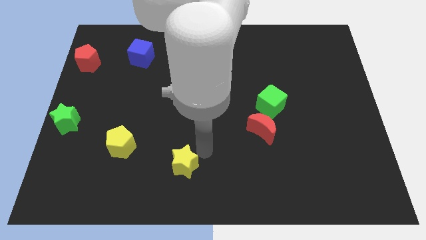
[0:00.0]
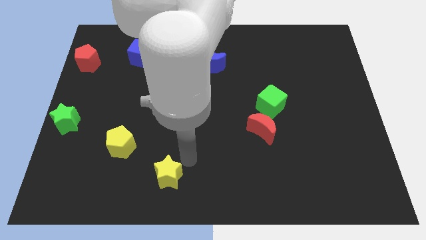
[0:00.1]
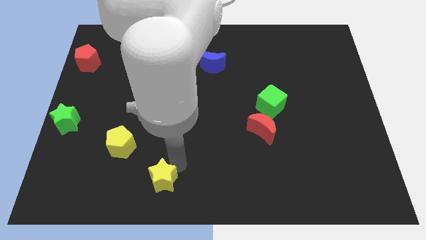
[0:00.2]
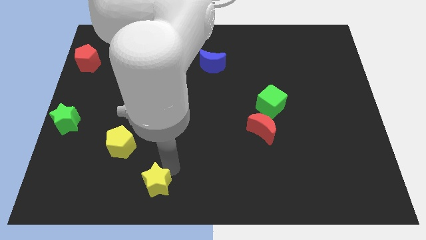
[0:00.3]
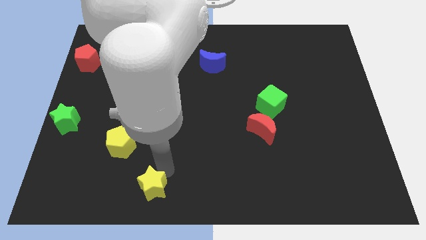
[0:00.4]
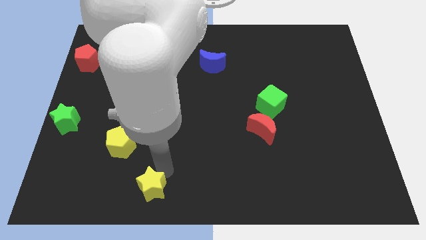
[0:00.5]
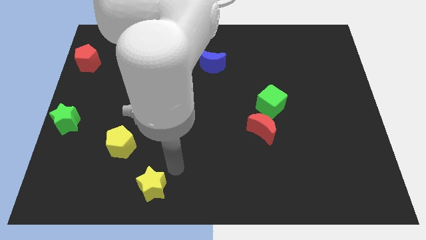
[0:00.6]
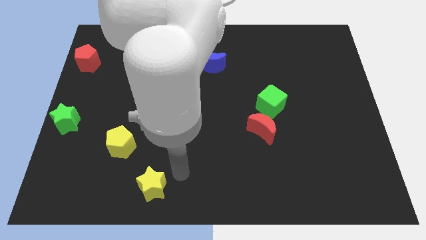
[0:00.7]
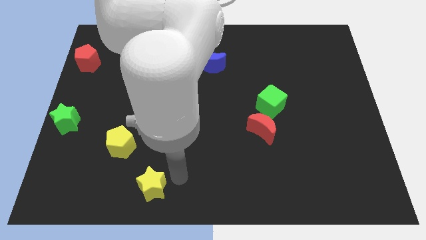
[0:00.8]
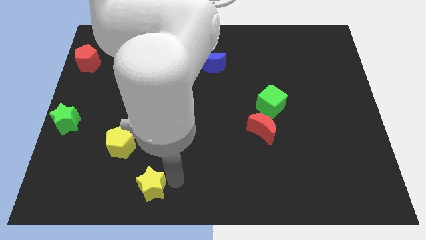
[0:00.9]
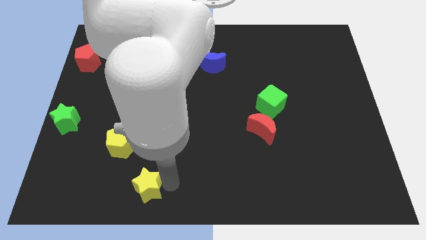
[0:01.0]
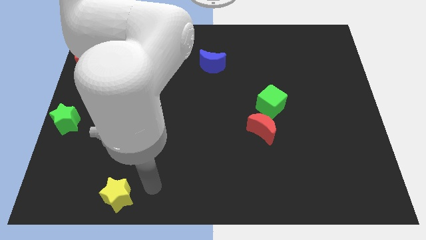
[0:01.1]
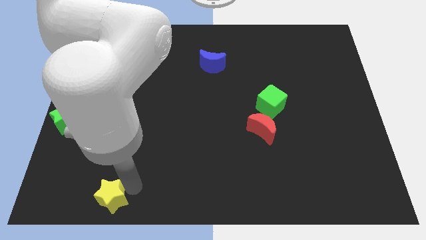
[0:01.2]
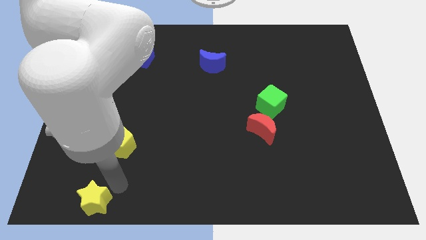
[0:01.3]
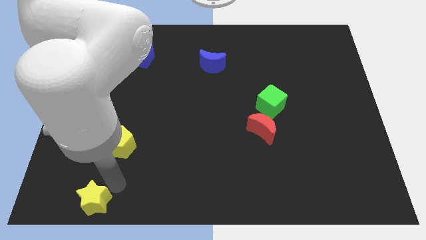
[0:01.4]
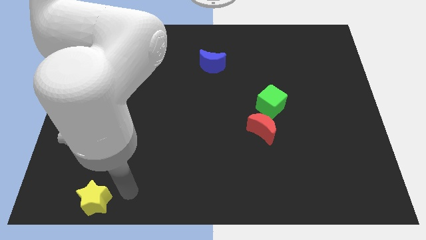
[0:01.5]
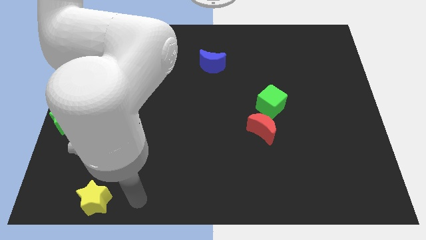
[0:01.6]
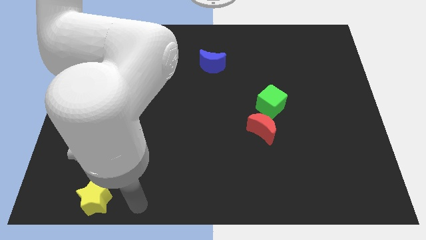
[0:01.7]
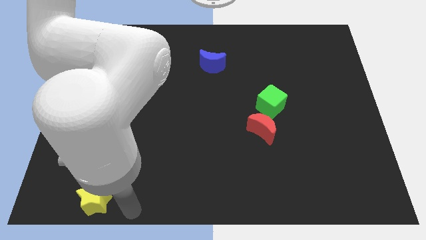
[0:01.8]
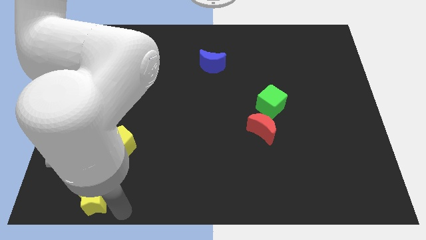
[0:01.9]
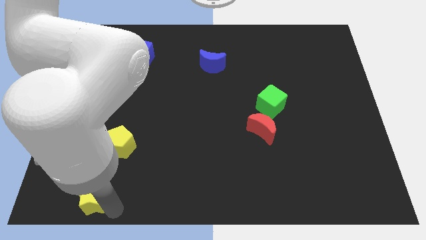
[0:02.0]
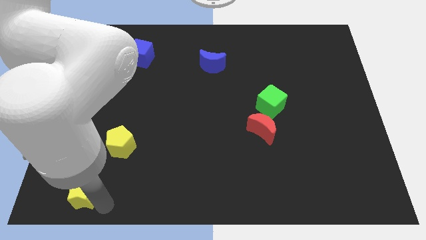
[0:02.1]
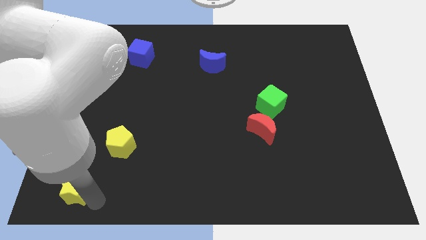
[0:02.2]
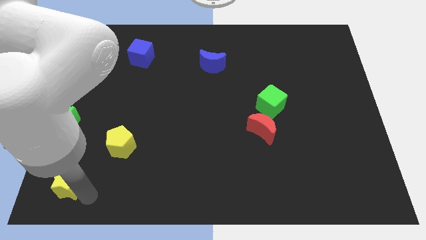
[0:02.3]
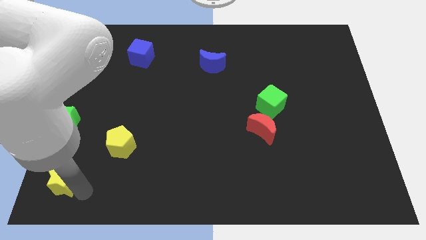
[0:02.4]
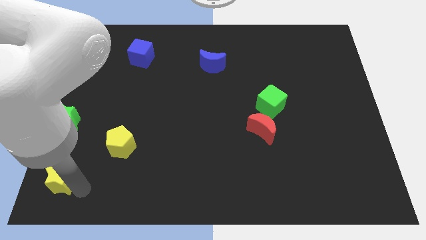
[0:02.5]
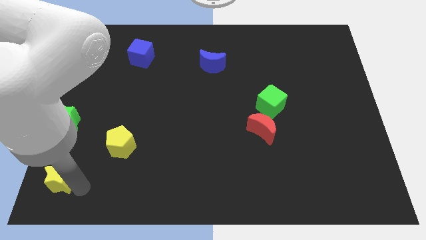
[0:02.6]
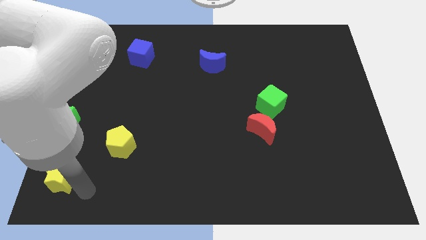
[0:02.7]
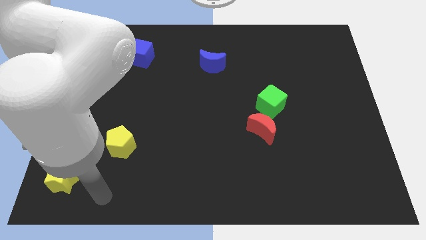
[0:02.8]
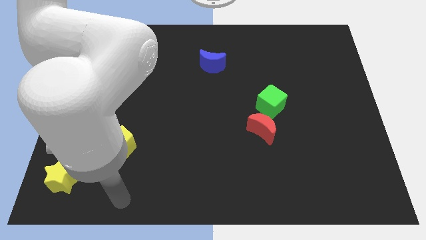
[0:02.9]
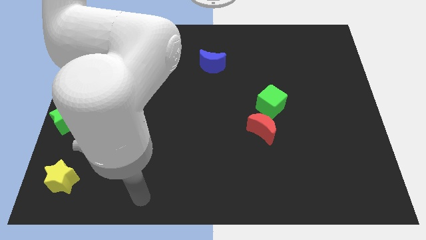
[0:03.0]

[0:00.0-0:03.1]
put the yellow star below the green star

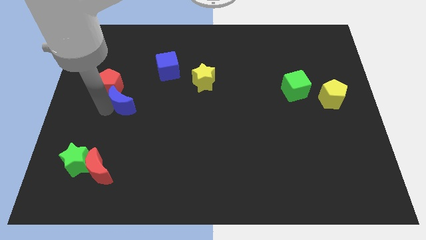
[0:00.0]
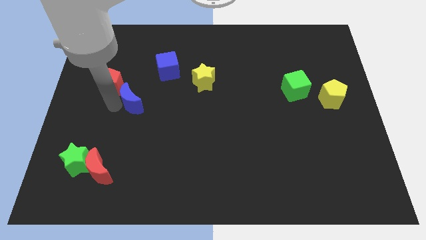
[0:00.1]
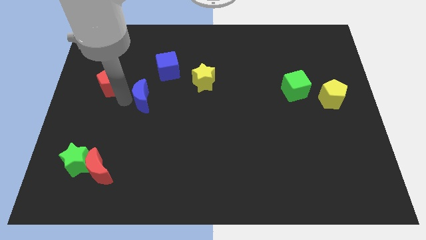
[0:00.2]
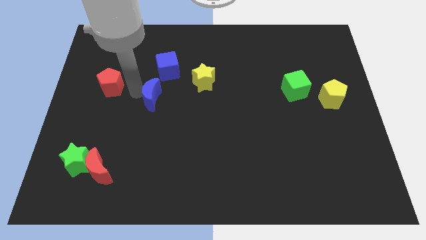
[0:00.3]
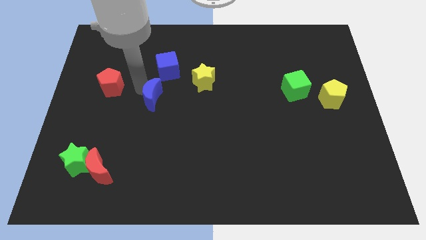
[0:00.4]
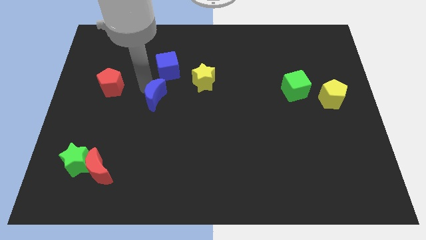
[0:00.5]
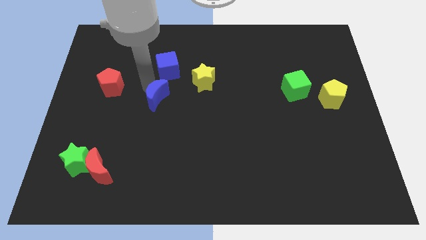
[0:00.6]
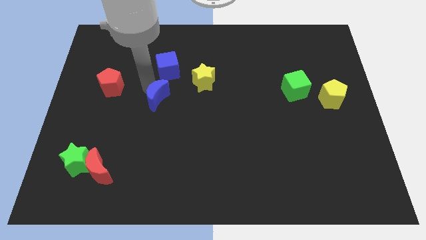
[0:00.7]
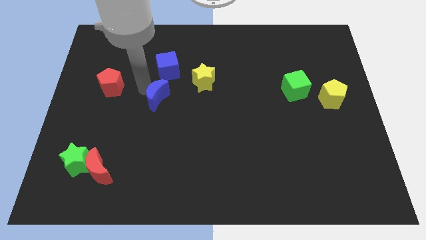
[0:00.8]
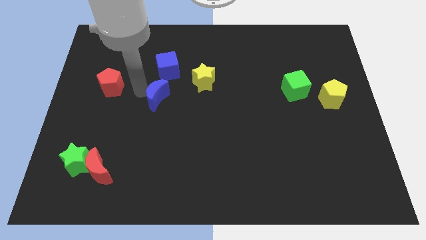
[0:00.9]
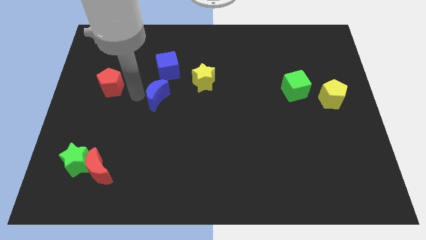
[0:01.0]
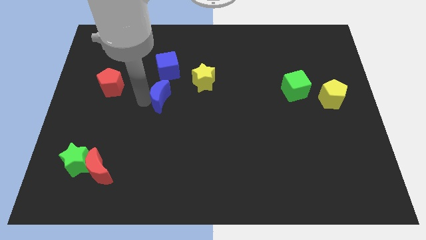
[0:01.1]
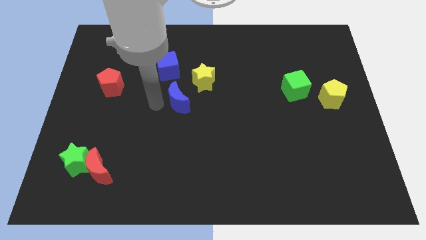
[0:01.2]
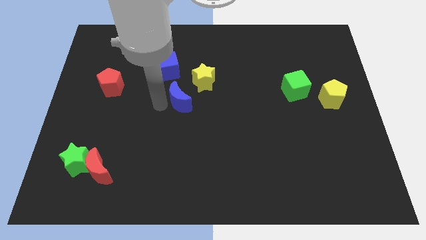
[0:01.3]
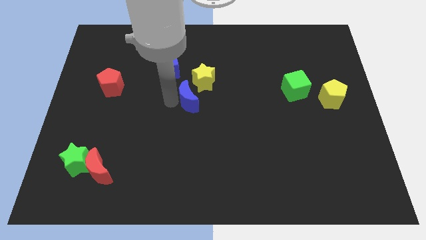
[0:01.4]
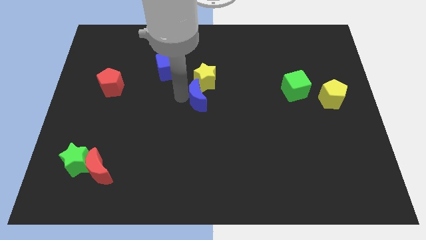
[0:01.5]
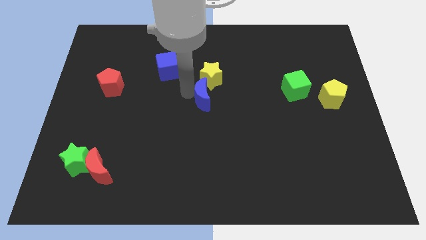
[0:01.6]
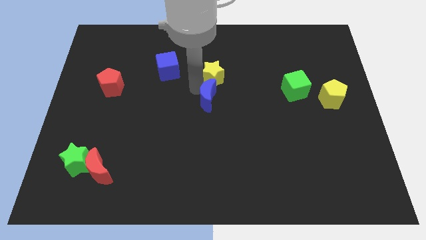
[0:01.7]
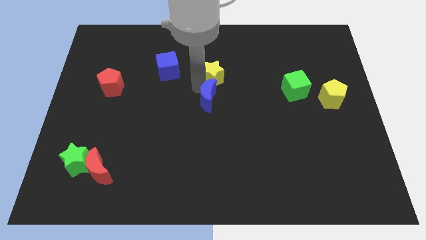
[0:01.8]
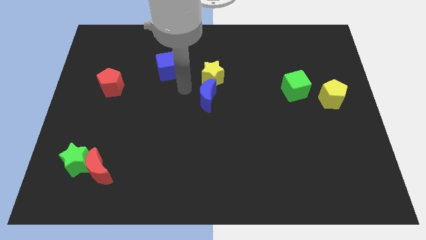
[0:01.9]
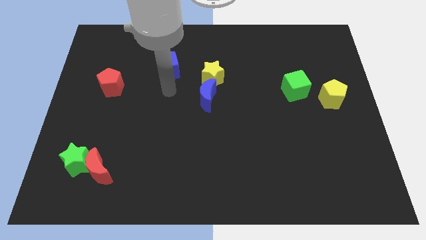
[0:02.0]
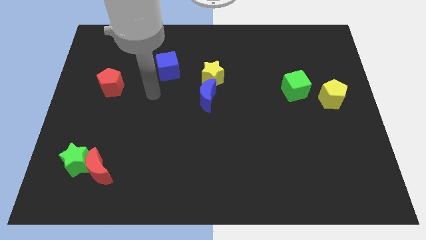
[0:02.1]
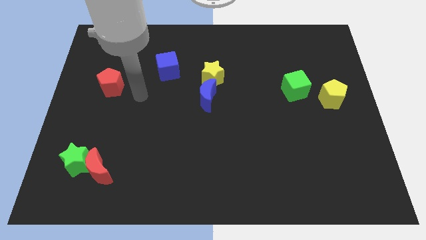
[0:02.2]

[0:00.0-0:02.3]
place the blue crescent below the yellow star

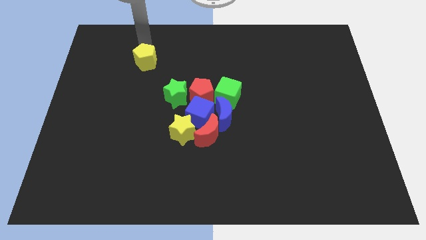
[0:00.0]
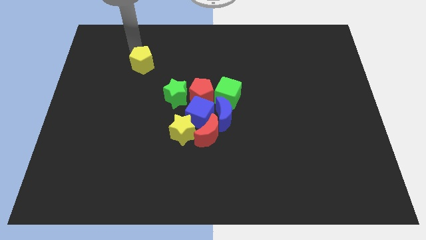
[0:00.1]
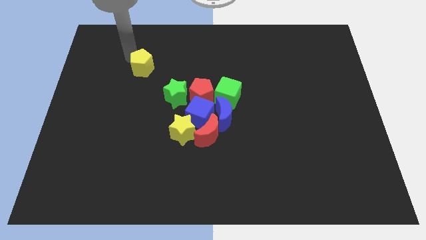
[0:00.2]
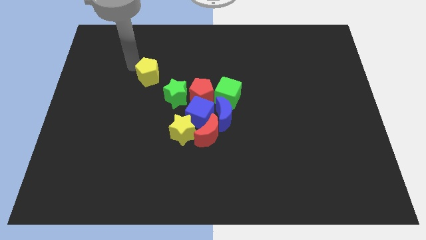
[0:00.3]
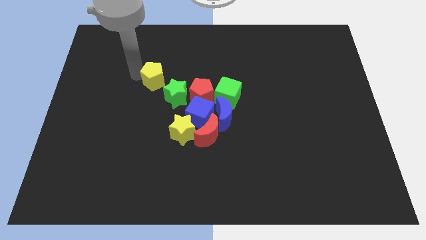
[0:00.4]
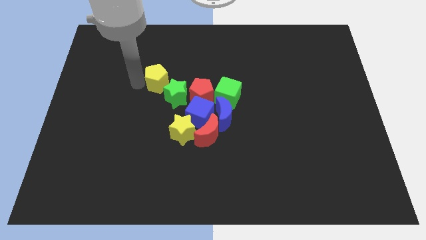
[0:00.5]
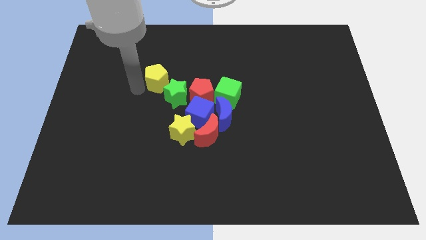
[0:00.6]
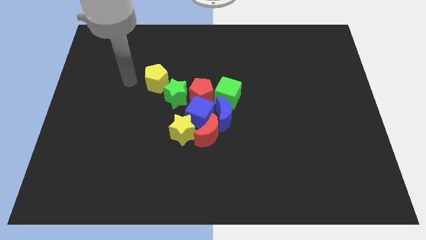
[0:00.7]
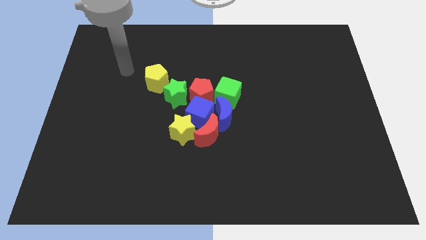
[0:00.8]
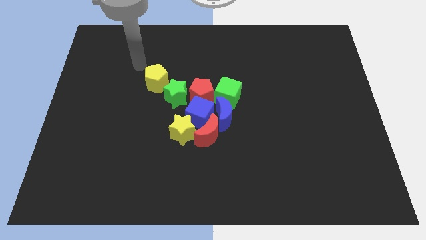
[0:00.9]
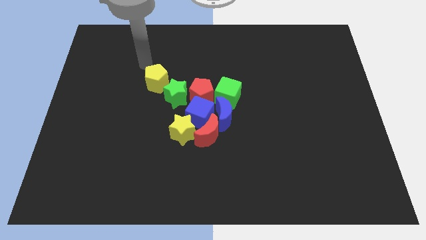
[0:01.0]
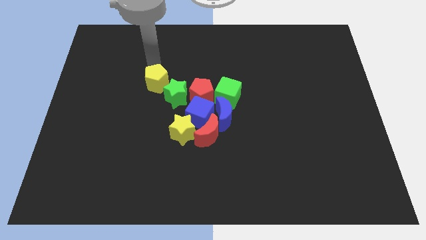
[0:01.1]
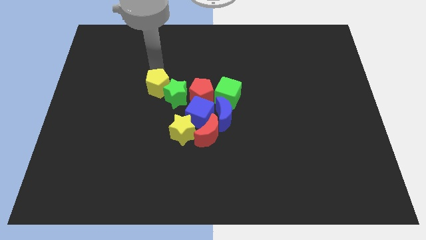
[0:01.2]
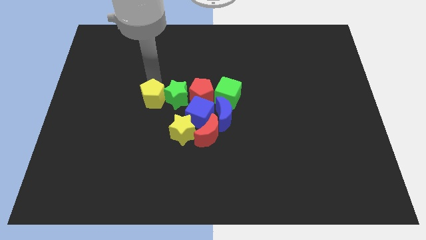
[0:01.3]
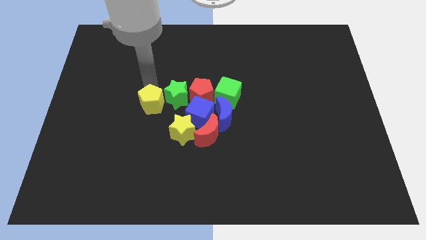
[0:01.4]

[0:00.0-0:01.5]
push the yellow pentagon to the left of the green star

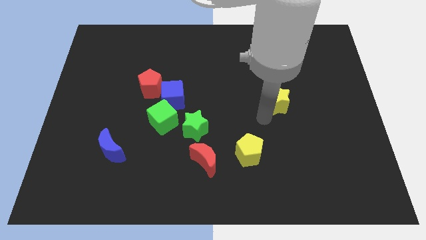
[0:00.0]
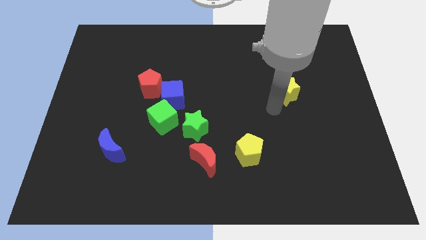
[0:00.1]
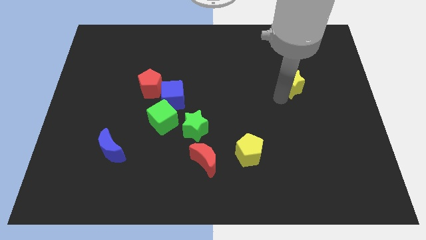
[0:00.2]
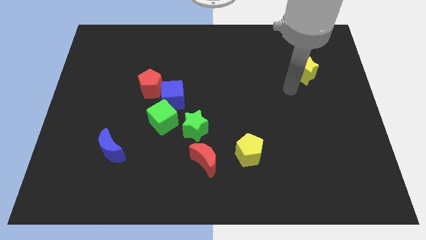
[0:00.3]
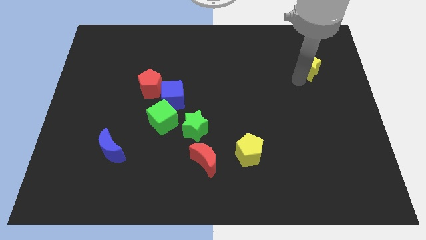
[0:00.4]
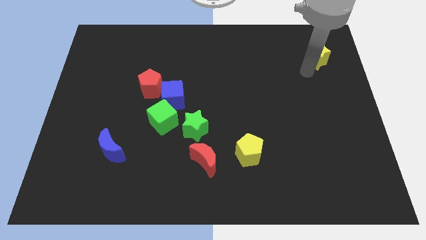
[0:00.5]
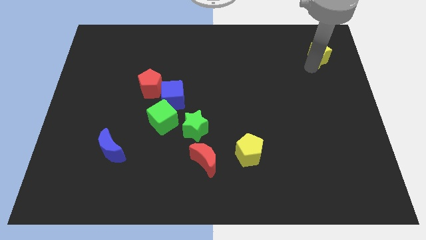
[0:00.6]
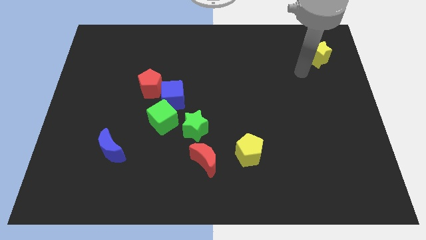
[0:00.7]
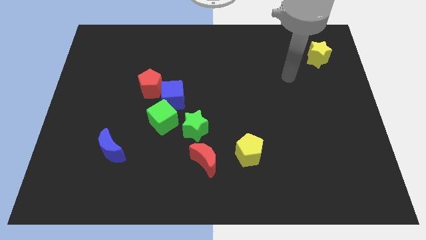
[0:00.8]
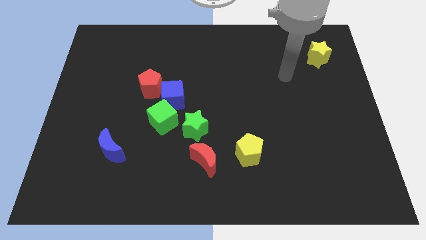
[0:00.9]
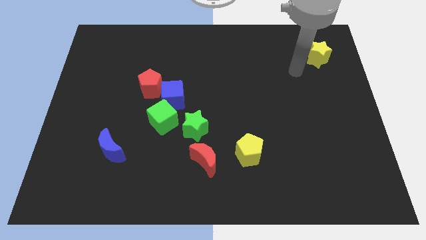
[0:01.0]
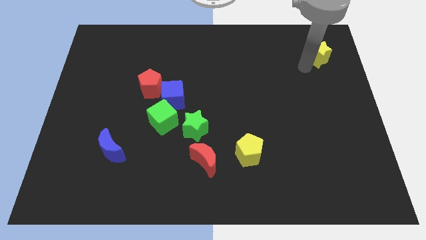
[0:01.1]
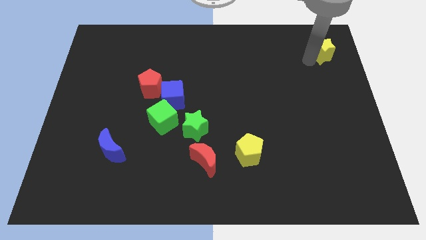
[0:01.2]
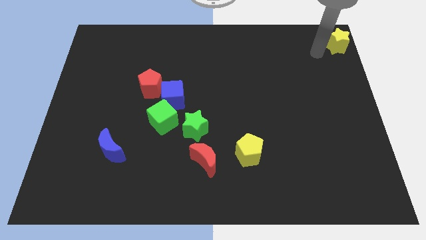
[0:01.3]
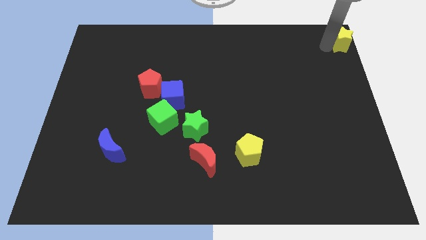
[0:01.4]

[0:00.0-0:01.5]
move the yellow star to the top right corner of the board

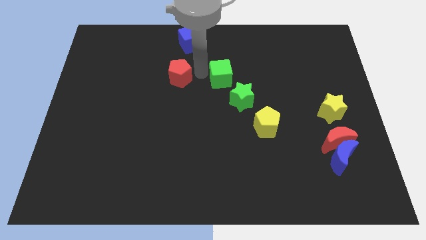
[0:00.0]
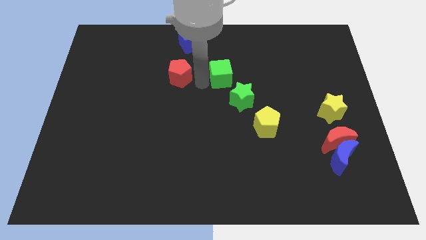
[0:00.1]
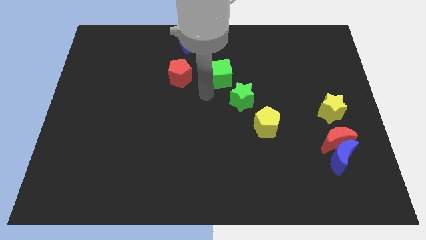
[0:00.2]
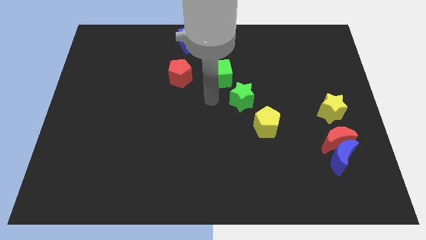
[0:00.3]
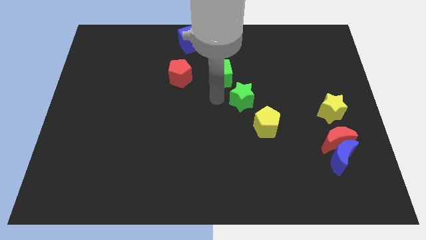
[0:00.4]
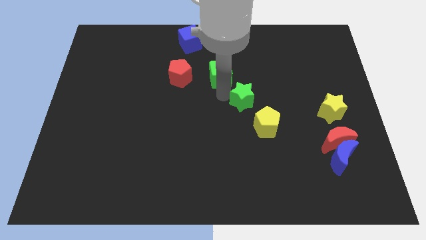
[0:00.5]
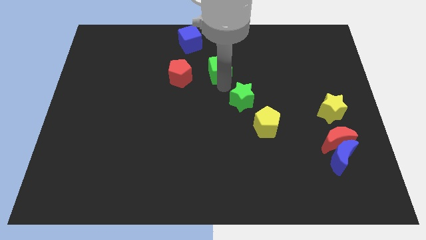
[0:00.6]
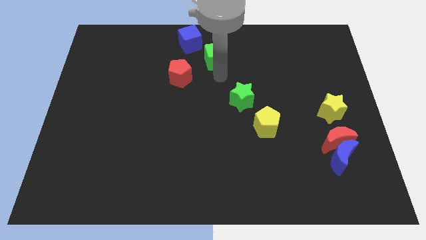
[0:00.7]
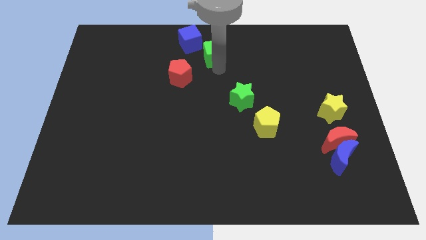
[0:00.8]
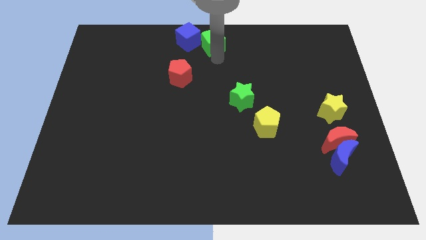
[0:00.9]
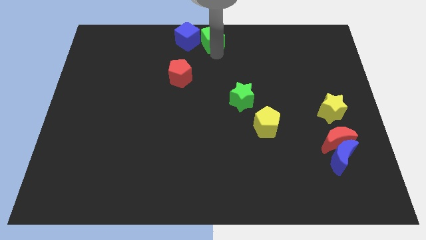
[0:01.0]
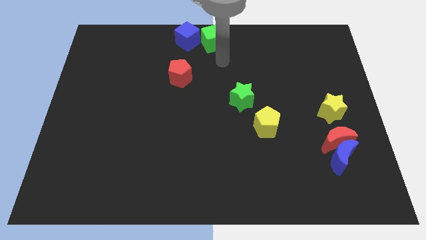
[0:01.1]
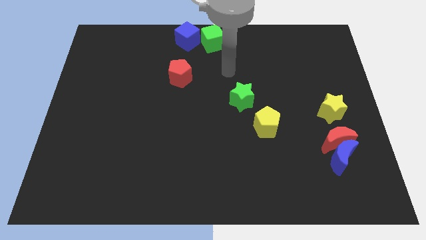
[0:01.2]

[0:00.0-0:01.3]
move the green cube to the top center of the board
